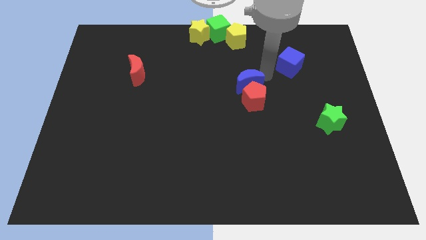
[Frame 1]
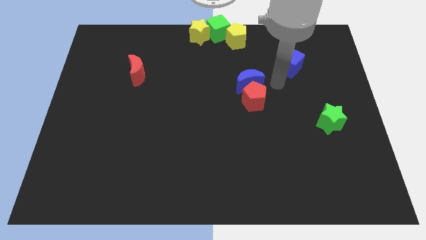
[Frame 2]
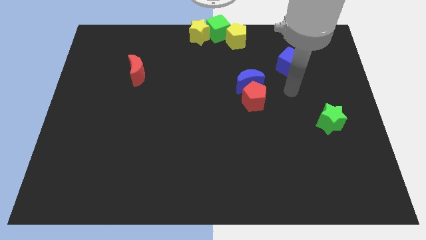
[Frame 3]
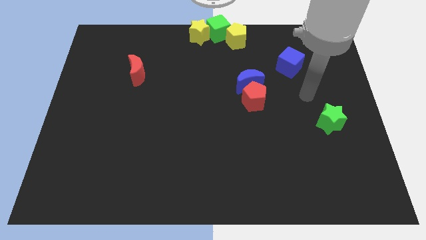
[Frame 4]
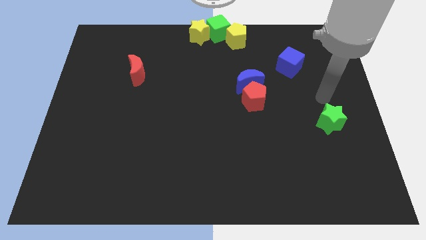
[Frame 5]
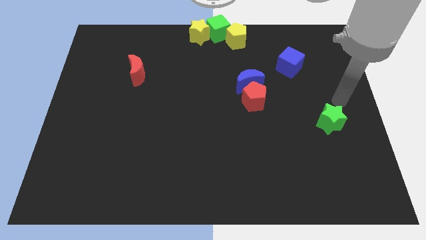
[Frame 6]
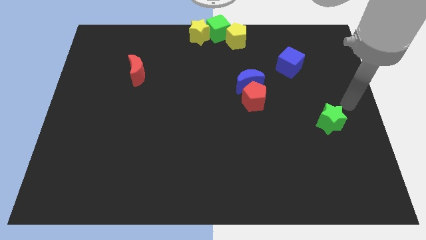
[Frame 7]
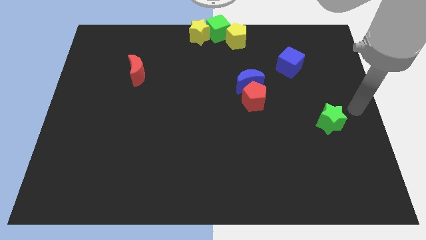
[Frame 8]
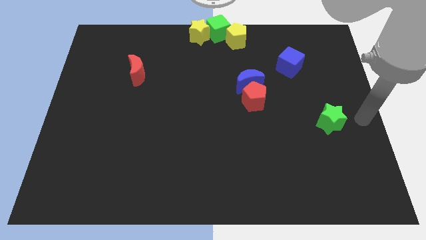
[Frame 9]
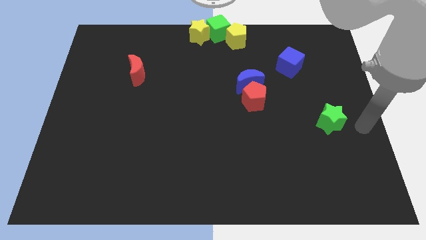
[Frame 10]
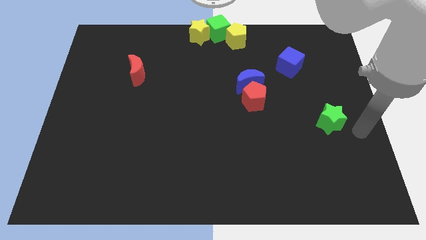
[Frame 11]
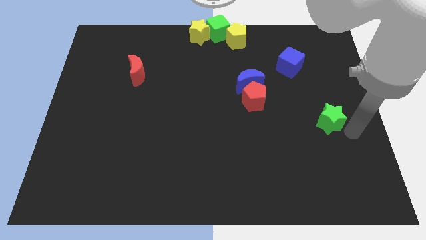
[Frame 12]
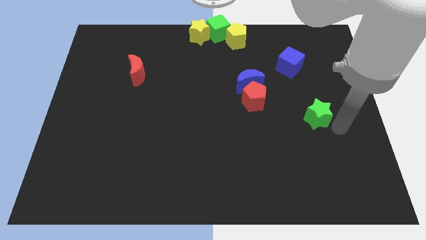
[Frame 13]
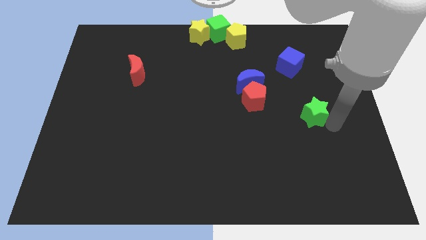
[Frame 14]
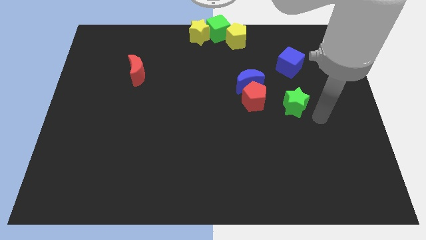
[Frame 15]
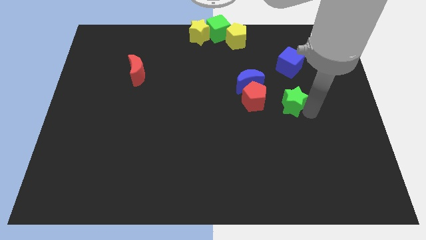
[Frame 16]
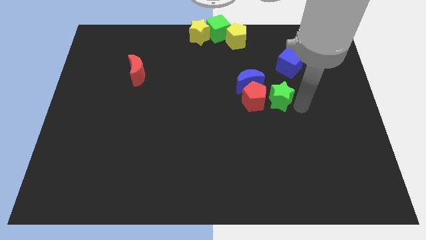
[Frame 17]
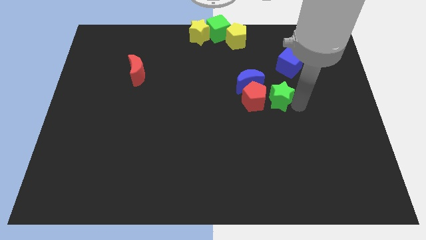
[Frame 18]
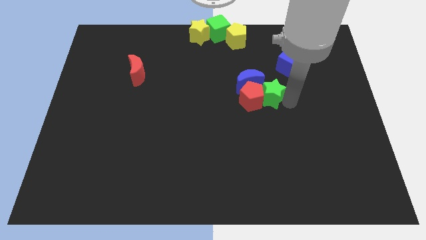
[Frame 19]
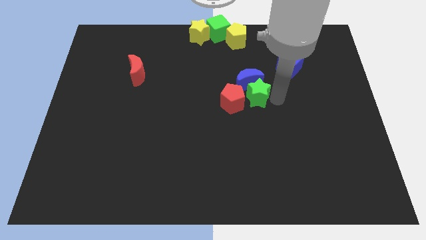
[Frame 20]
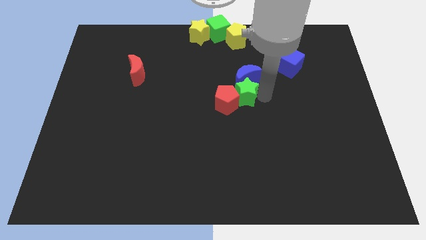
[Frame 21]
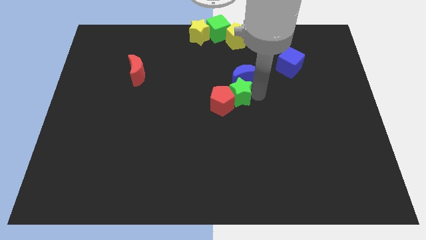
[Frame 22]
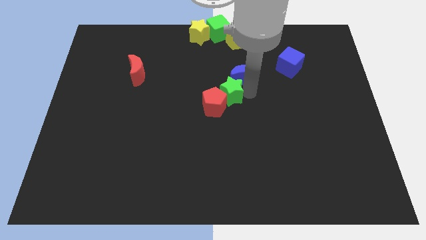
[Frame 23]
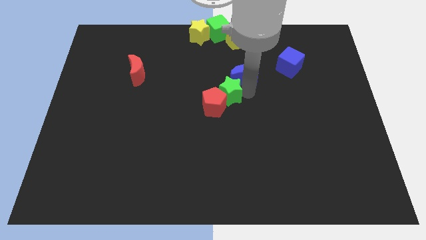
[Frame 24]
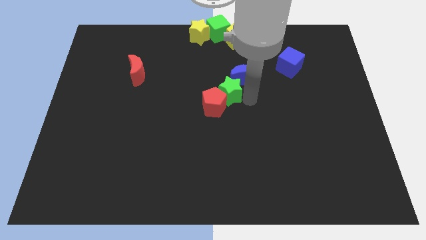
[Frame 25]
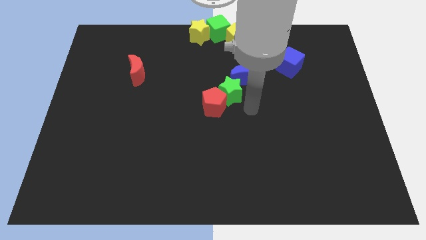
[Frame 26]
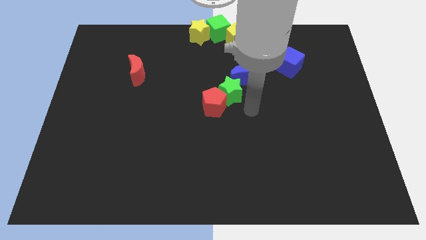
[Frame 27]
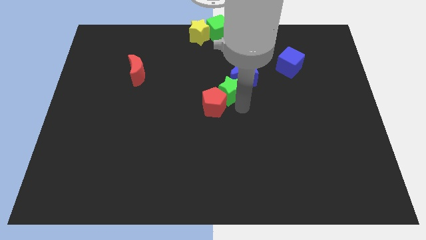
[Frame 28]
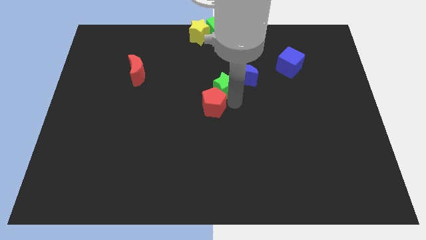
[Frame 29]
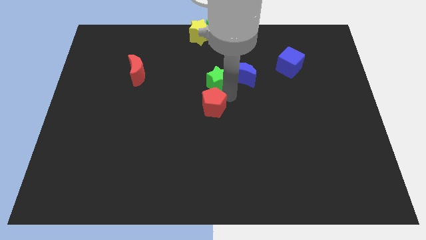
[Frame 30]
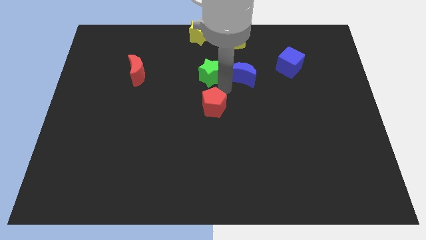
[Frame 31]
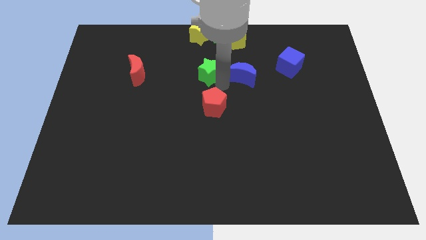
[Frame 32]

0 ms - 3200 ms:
push green star along with the red pentagon towards the center

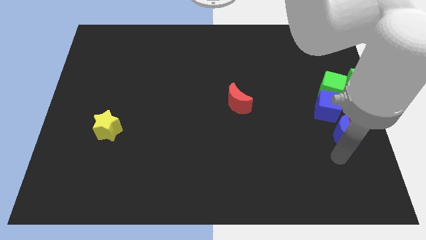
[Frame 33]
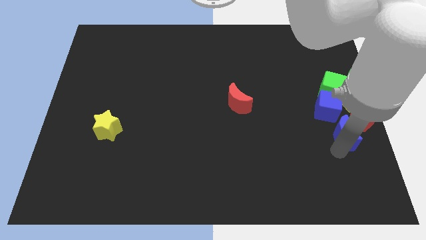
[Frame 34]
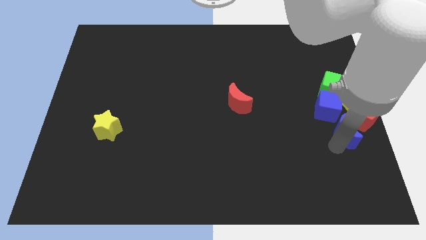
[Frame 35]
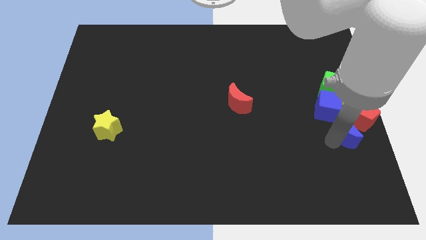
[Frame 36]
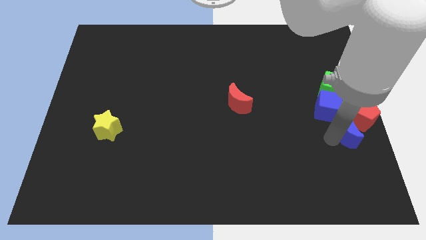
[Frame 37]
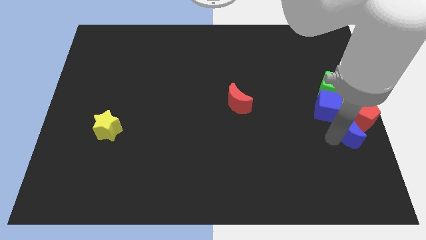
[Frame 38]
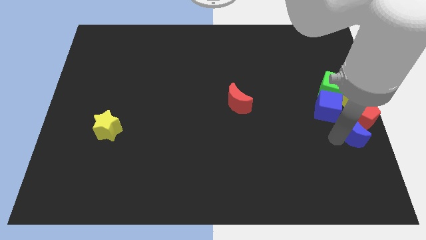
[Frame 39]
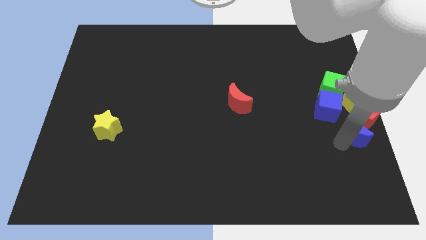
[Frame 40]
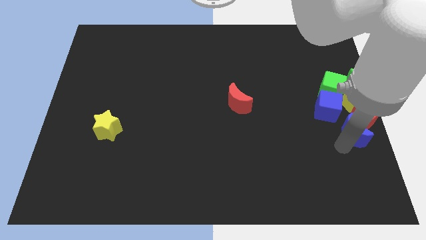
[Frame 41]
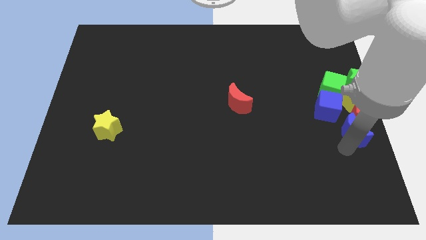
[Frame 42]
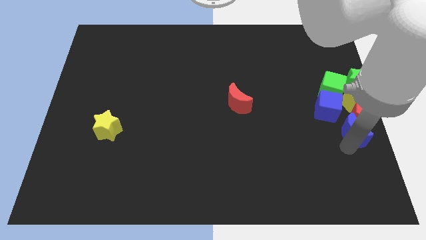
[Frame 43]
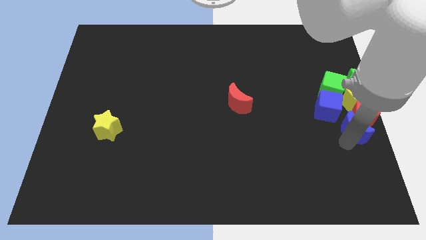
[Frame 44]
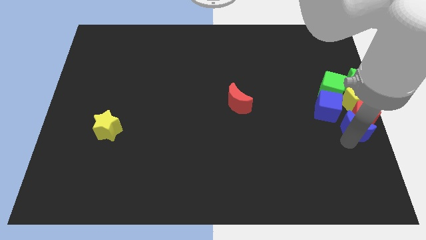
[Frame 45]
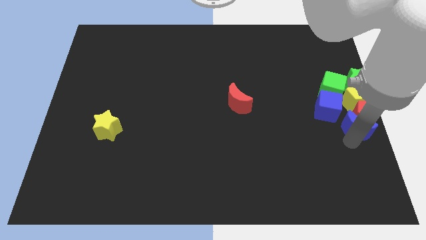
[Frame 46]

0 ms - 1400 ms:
place the blue crescent close to the red pentagon

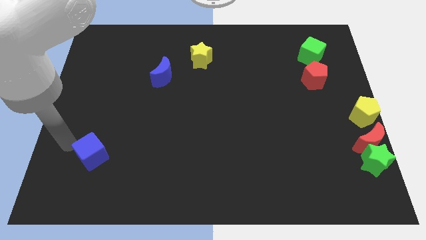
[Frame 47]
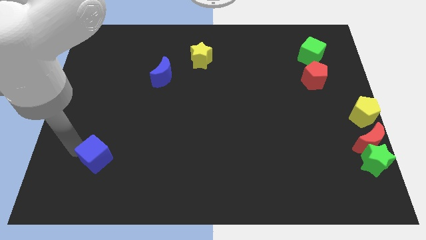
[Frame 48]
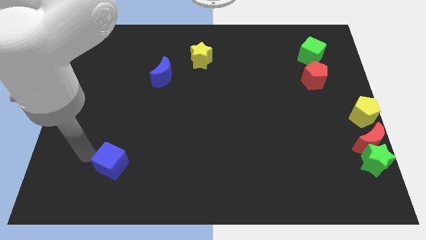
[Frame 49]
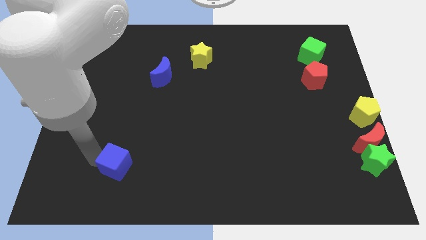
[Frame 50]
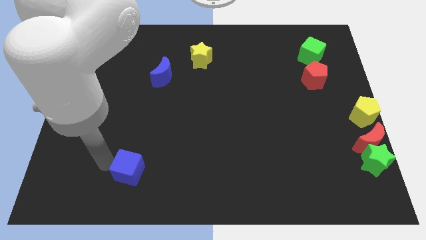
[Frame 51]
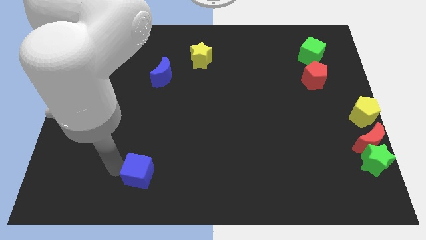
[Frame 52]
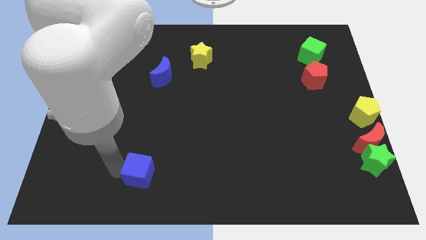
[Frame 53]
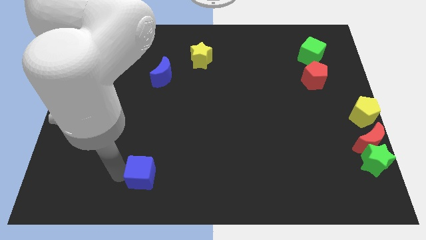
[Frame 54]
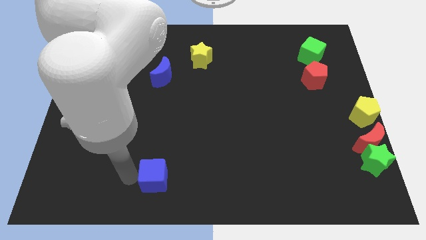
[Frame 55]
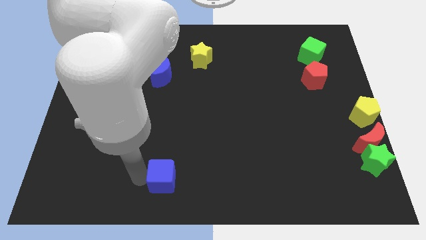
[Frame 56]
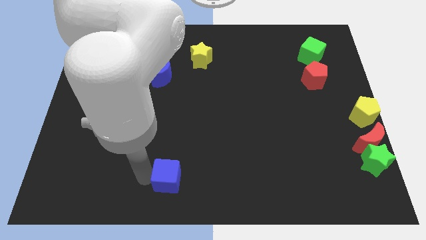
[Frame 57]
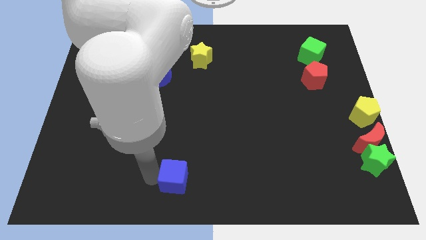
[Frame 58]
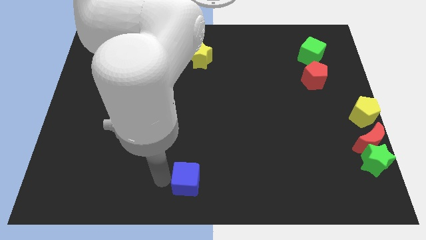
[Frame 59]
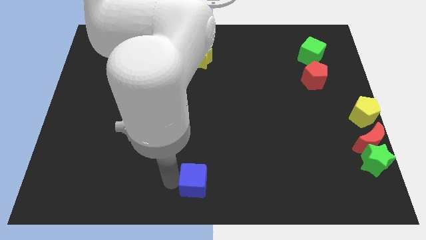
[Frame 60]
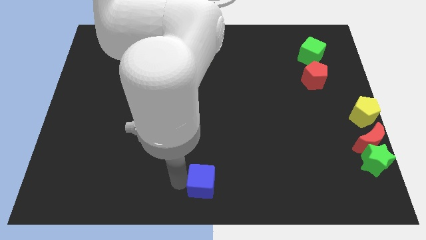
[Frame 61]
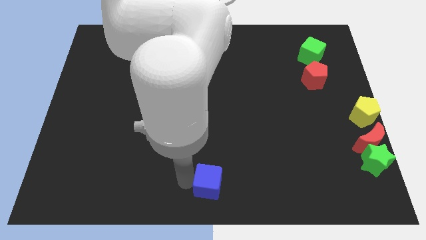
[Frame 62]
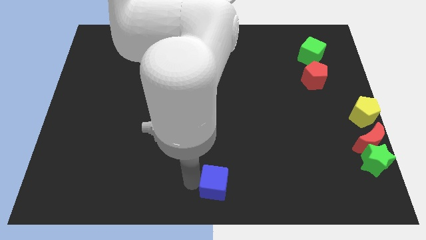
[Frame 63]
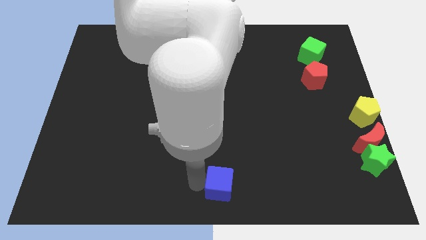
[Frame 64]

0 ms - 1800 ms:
push the blue cube to the bottom center of the board

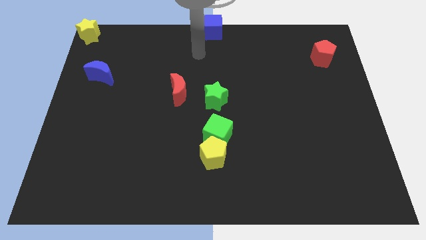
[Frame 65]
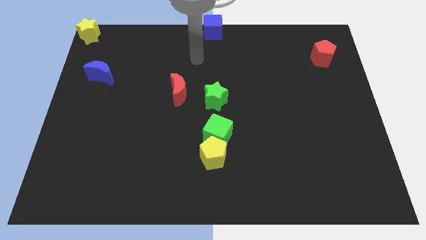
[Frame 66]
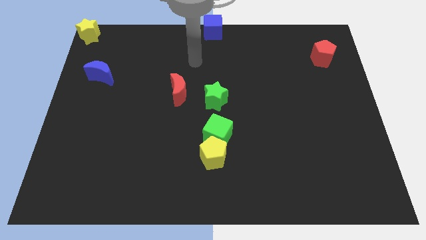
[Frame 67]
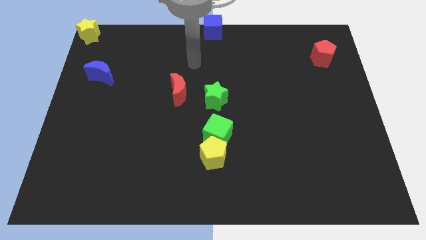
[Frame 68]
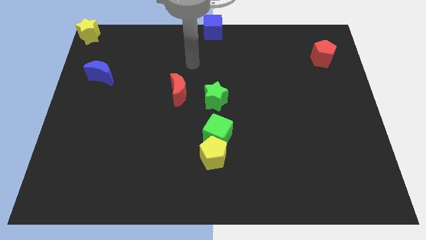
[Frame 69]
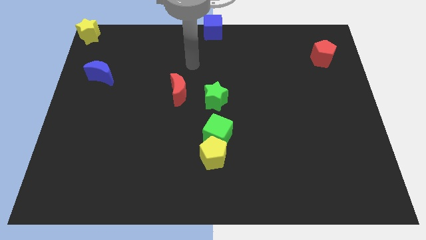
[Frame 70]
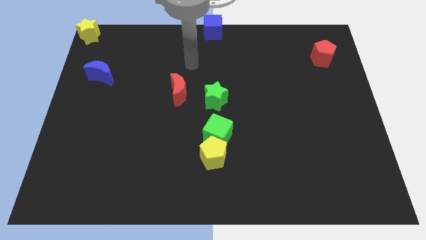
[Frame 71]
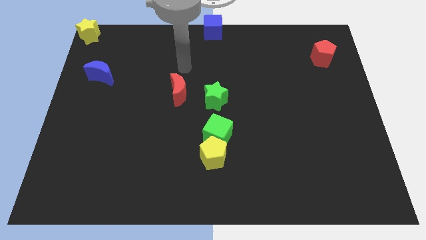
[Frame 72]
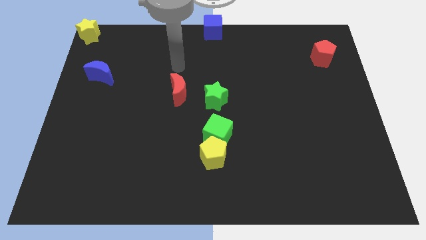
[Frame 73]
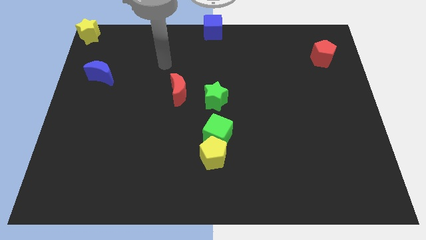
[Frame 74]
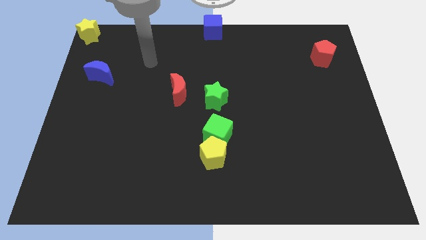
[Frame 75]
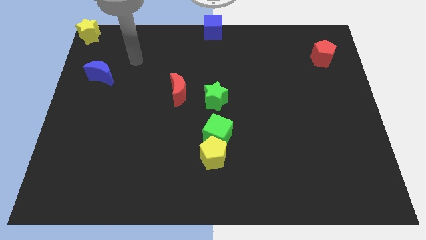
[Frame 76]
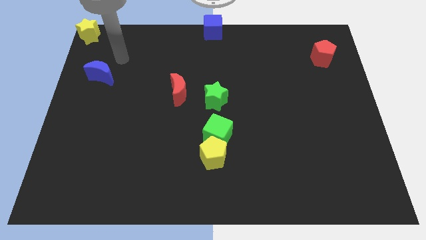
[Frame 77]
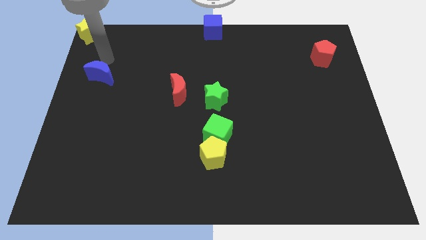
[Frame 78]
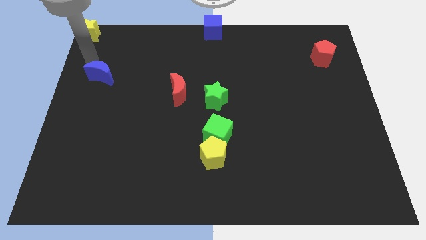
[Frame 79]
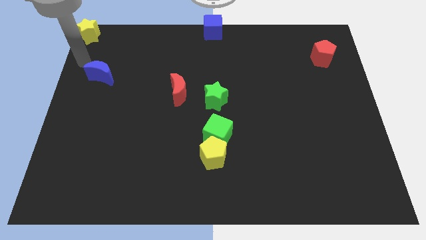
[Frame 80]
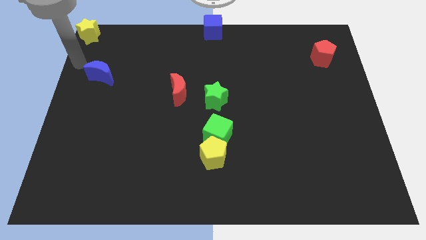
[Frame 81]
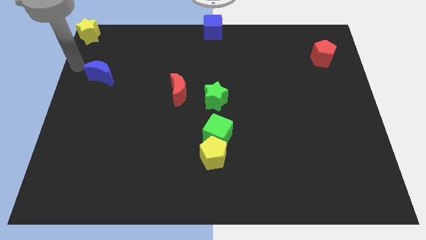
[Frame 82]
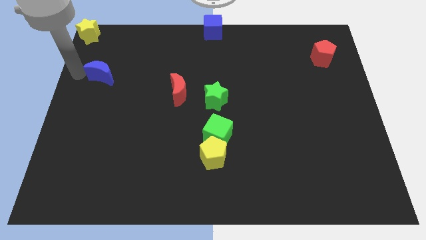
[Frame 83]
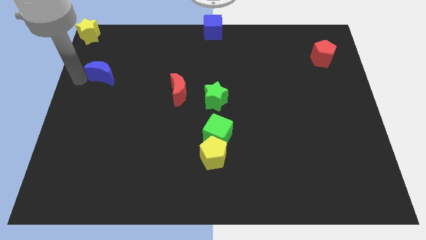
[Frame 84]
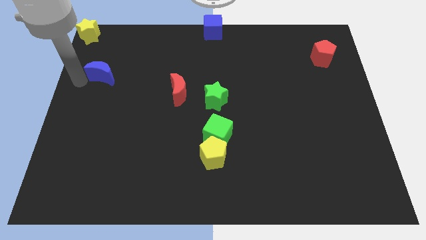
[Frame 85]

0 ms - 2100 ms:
move your arm from the blue cube to the blue moon

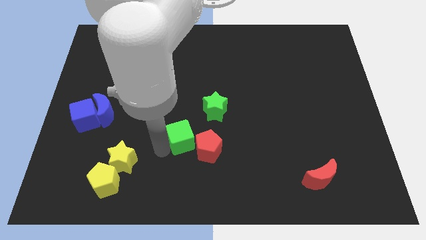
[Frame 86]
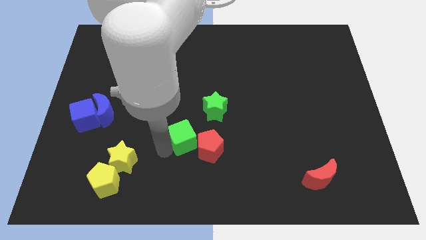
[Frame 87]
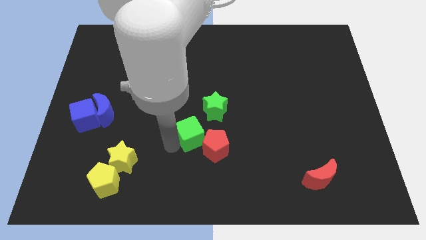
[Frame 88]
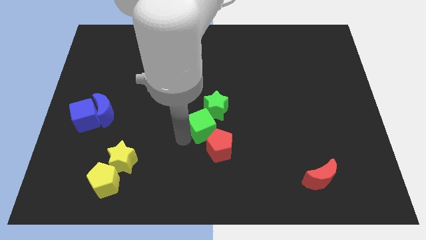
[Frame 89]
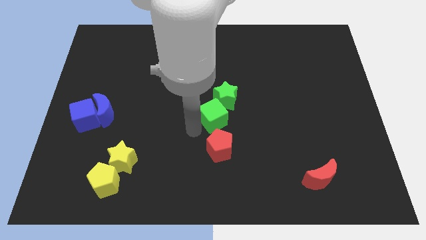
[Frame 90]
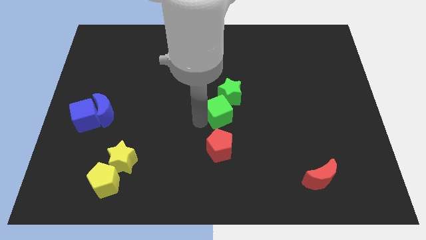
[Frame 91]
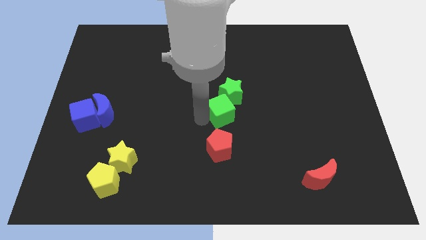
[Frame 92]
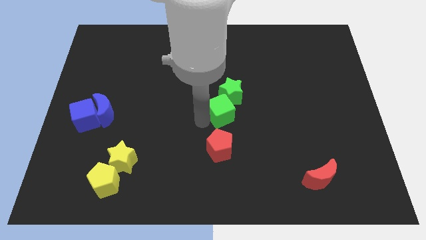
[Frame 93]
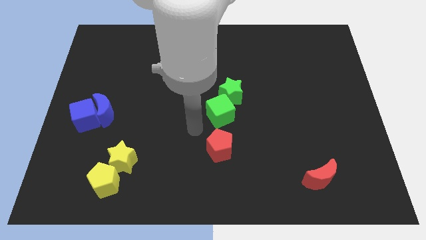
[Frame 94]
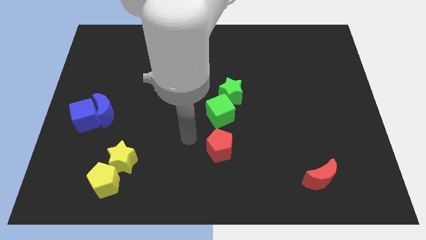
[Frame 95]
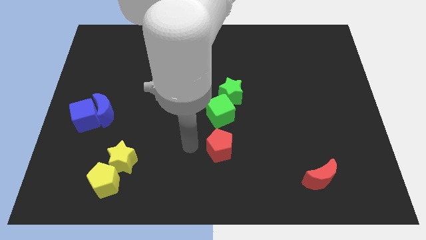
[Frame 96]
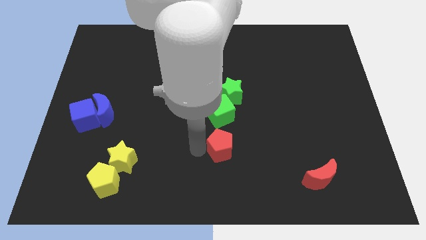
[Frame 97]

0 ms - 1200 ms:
slide the green cube into the green star
